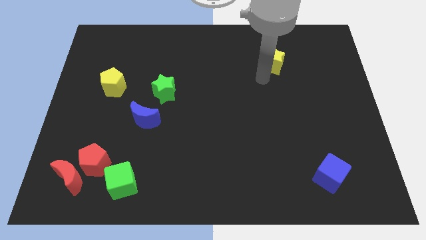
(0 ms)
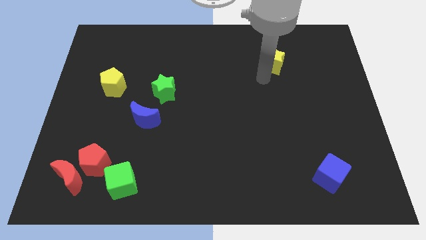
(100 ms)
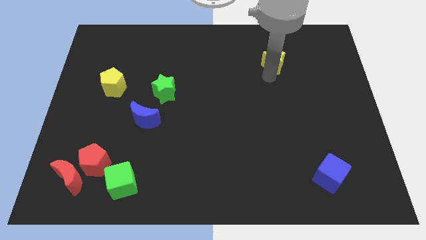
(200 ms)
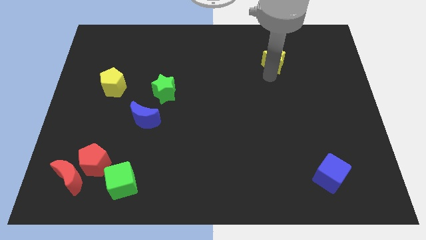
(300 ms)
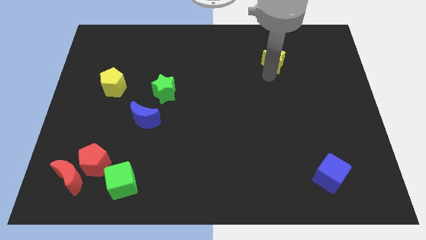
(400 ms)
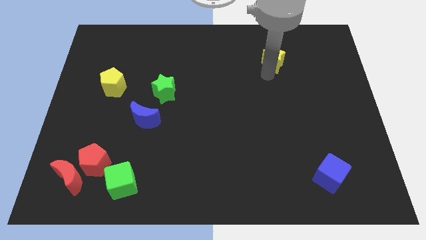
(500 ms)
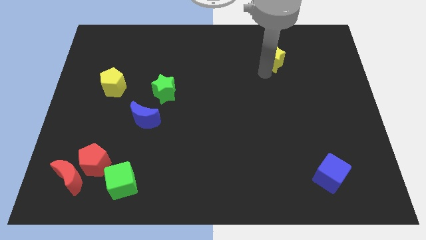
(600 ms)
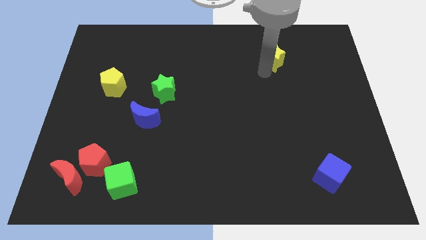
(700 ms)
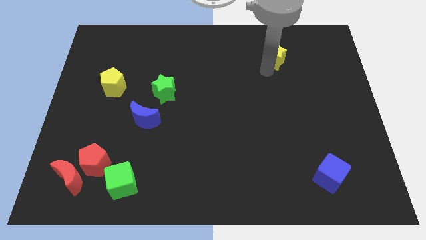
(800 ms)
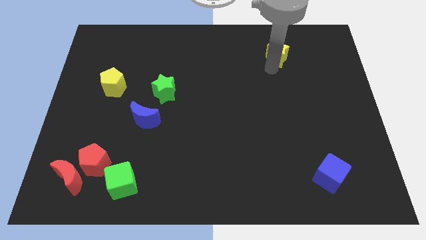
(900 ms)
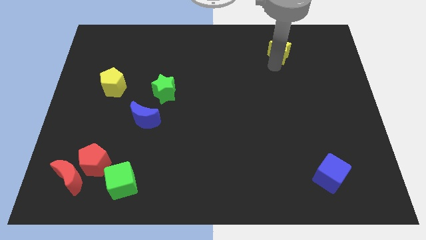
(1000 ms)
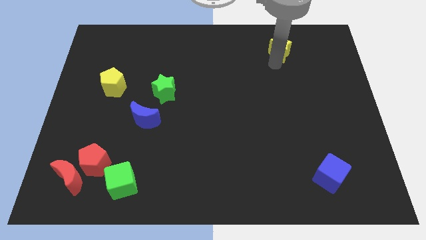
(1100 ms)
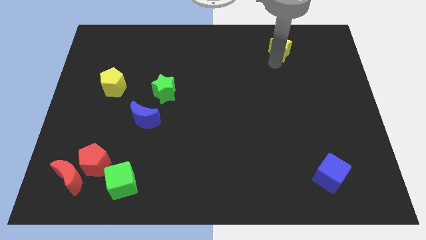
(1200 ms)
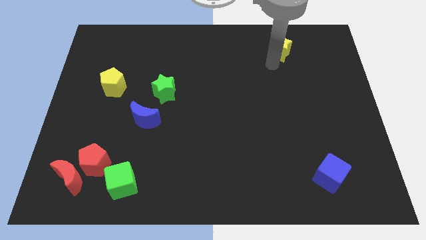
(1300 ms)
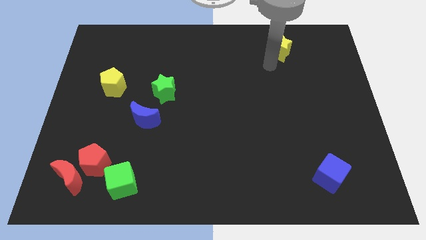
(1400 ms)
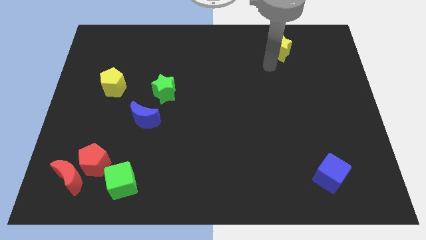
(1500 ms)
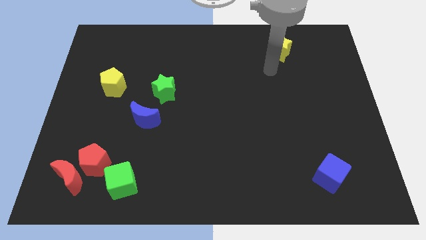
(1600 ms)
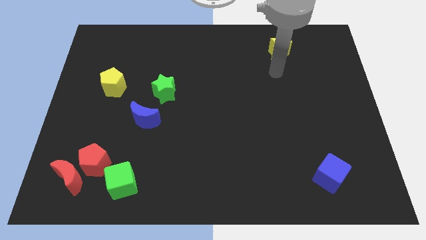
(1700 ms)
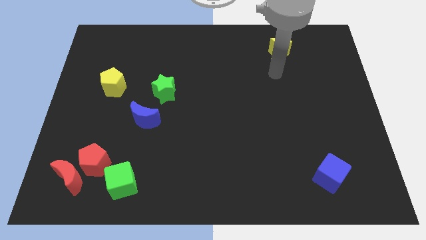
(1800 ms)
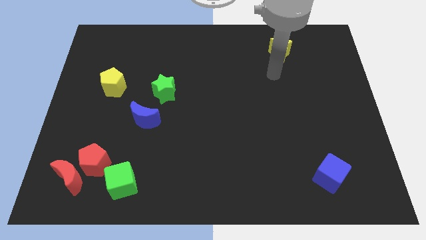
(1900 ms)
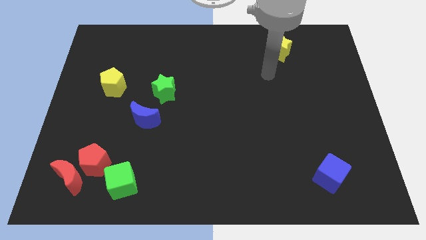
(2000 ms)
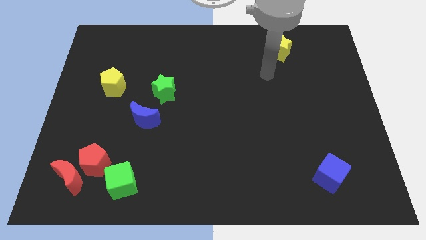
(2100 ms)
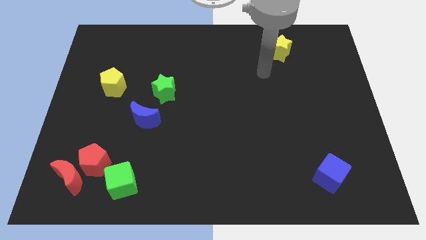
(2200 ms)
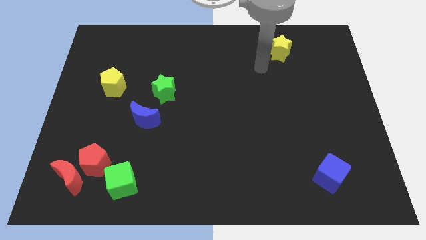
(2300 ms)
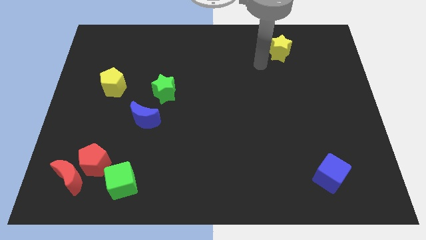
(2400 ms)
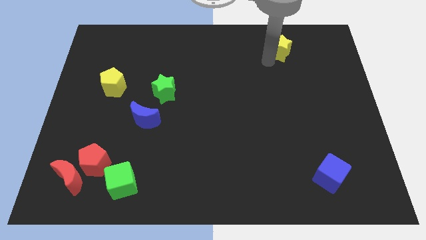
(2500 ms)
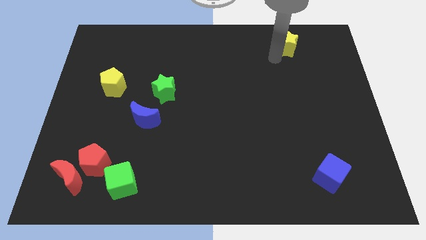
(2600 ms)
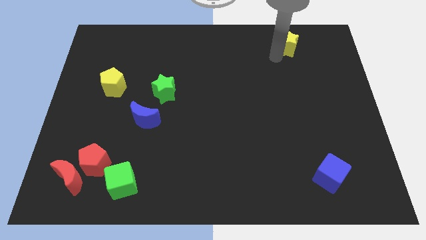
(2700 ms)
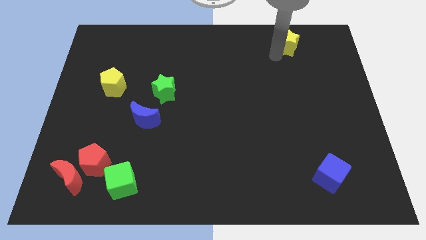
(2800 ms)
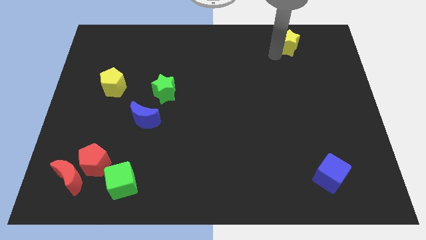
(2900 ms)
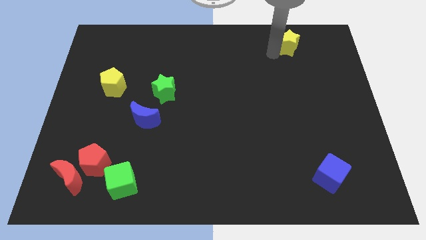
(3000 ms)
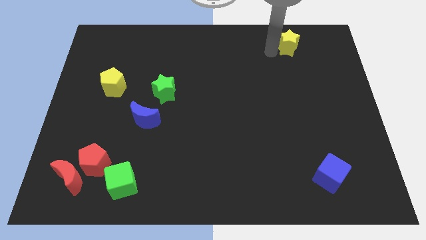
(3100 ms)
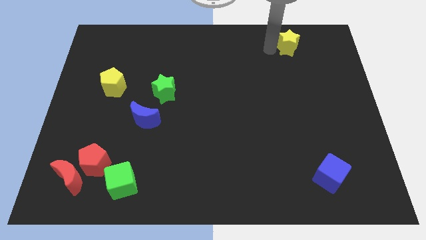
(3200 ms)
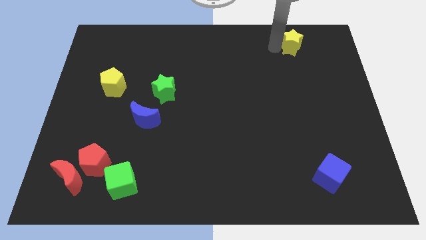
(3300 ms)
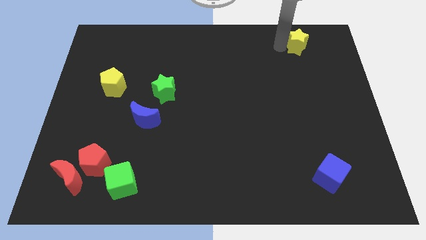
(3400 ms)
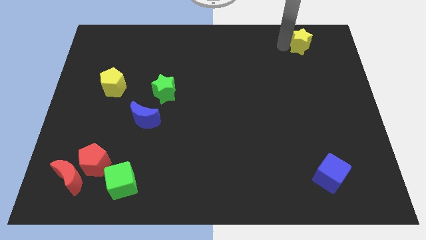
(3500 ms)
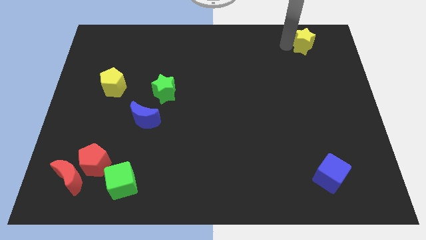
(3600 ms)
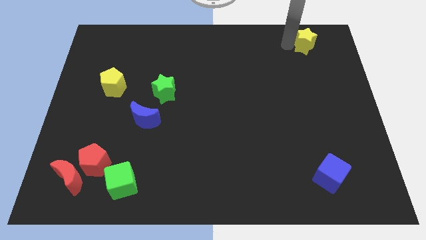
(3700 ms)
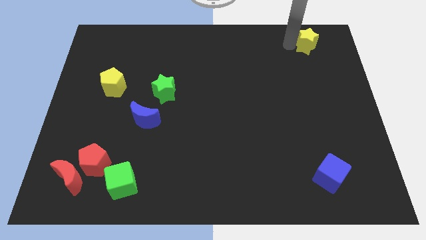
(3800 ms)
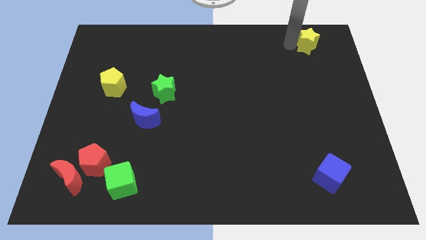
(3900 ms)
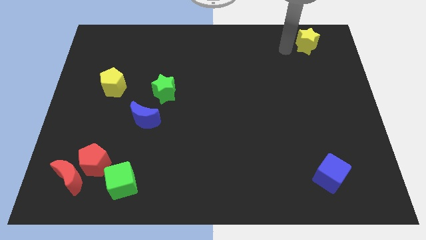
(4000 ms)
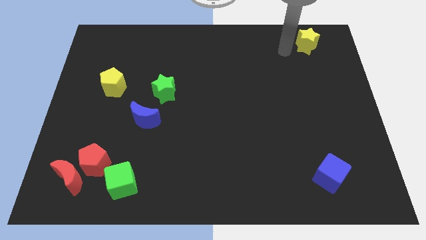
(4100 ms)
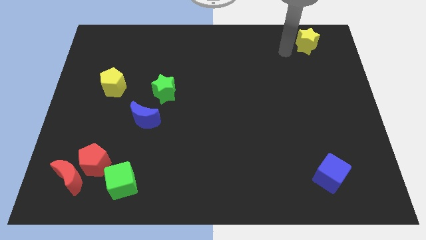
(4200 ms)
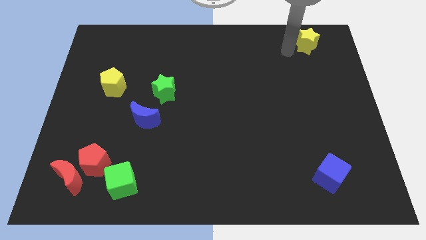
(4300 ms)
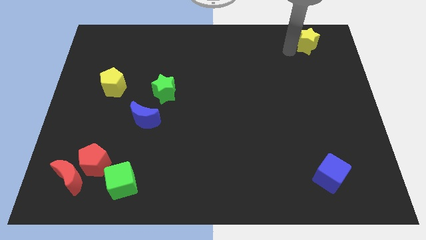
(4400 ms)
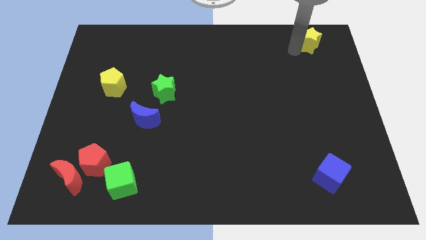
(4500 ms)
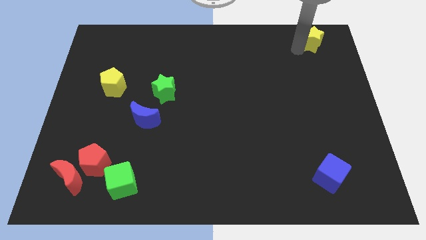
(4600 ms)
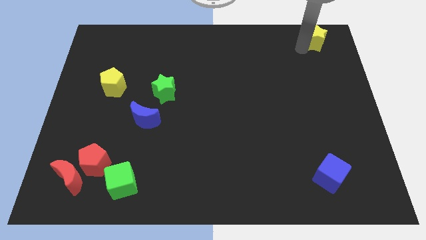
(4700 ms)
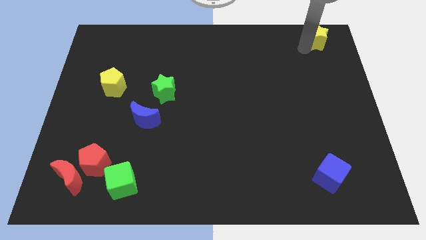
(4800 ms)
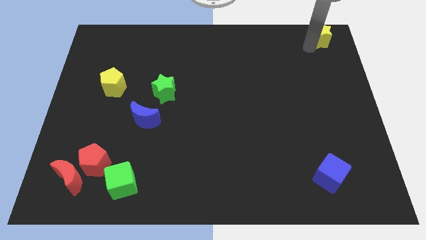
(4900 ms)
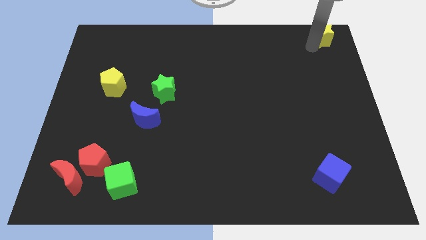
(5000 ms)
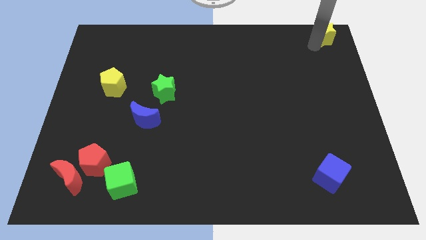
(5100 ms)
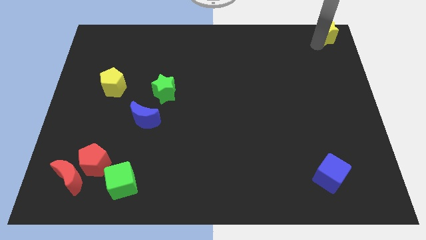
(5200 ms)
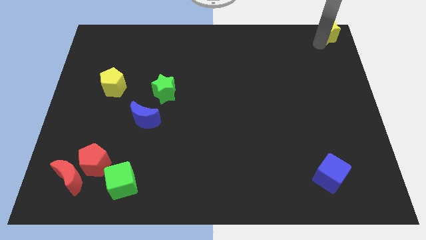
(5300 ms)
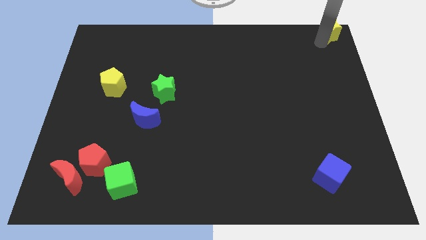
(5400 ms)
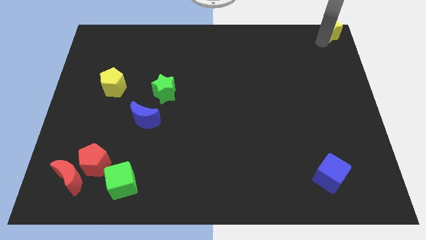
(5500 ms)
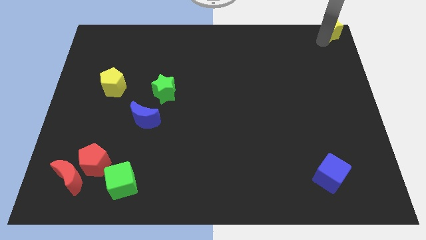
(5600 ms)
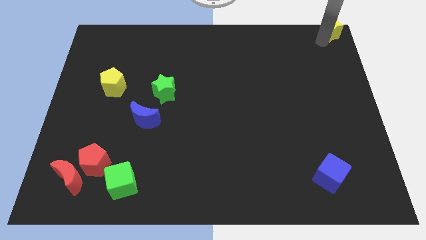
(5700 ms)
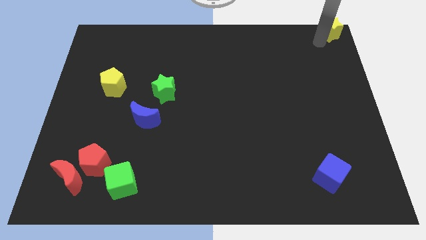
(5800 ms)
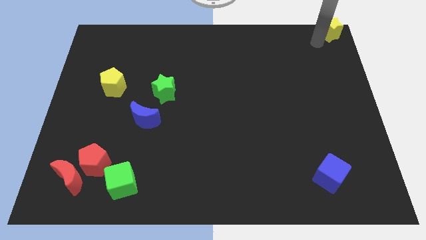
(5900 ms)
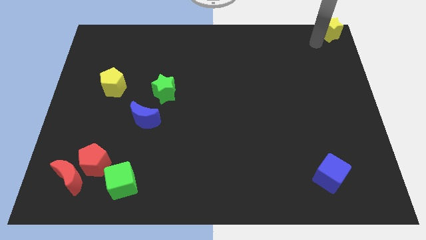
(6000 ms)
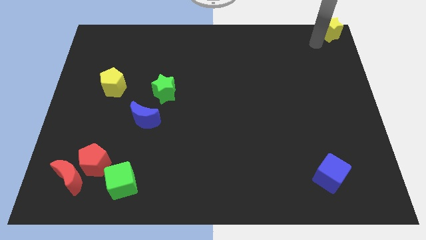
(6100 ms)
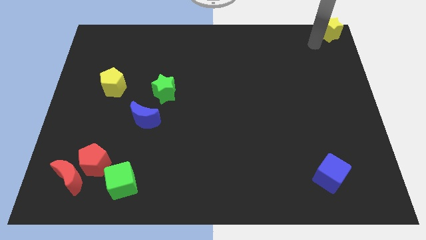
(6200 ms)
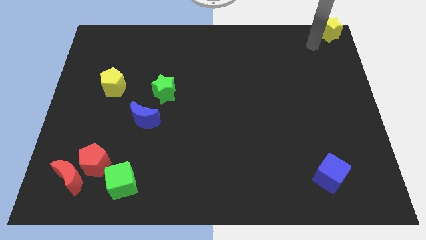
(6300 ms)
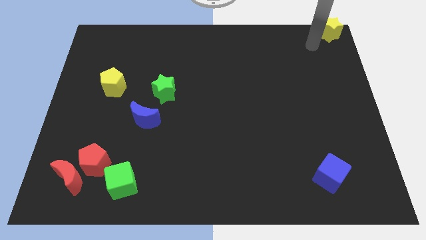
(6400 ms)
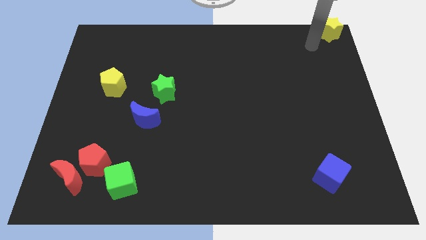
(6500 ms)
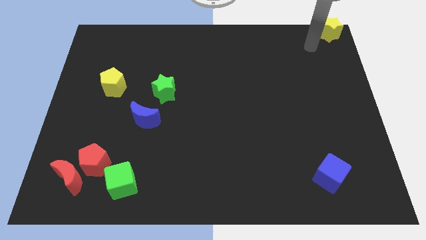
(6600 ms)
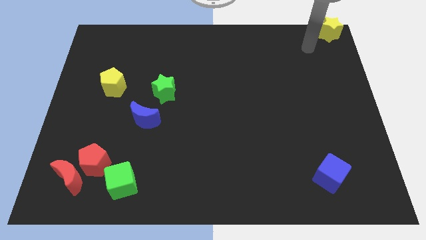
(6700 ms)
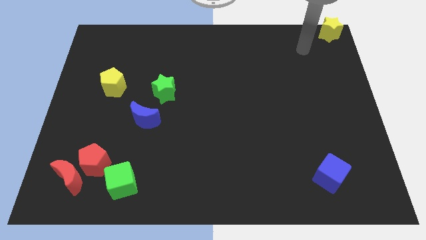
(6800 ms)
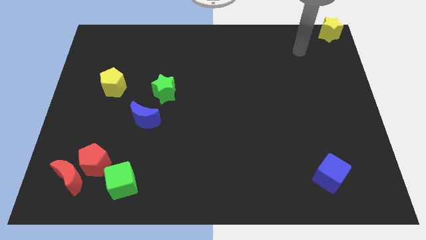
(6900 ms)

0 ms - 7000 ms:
move the yellow star to the top right corner

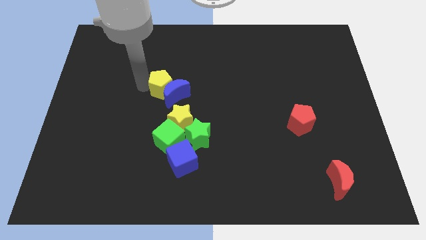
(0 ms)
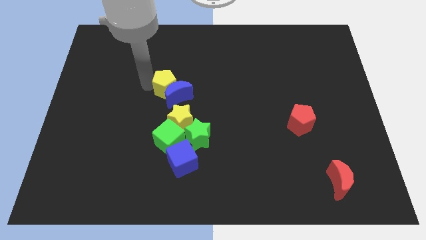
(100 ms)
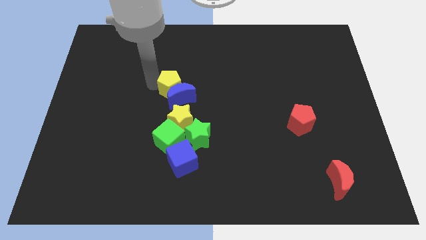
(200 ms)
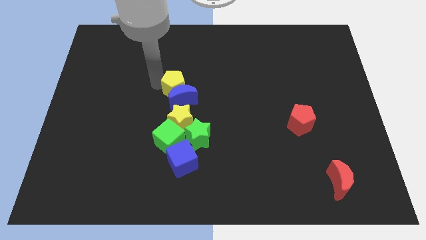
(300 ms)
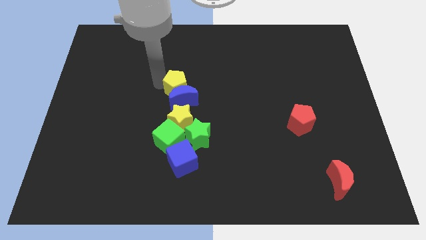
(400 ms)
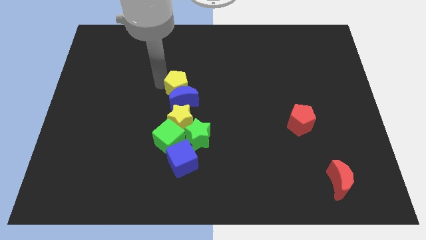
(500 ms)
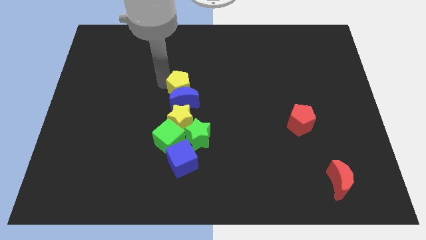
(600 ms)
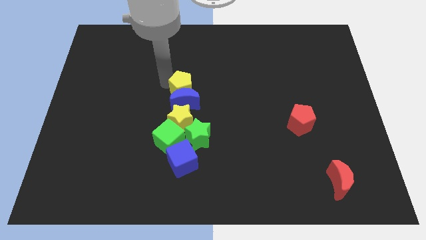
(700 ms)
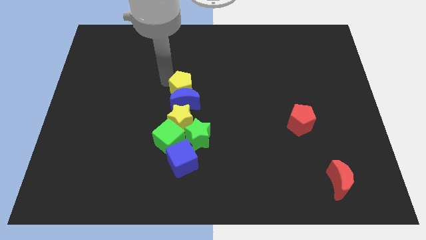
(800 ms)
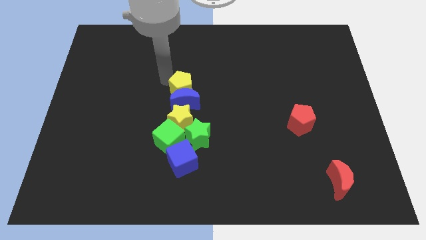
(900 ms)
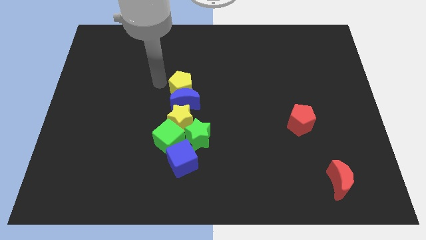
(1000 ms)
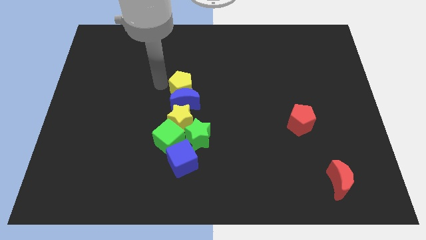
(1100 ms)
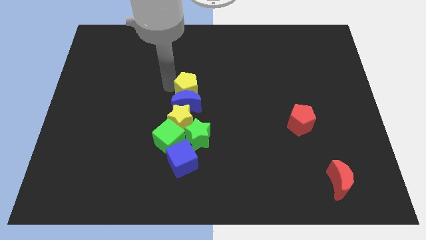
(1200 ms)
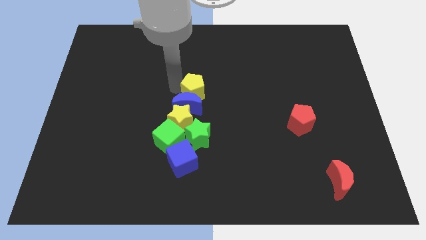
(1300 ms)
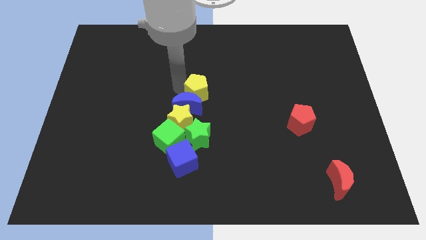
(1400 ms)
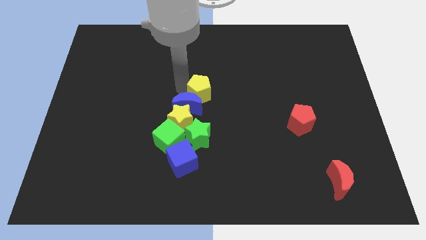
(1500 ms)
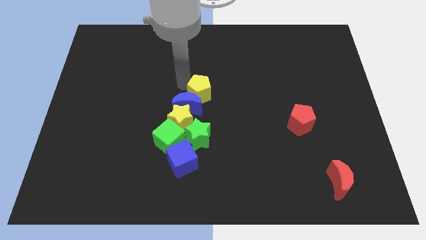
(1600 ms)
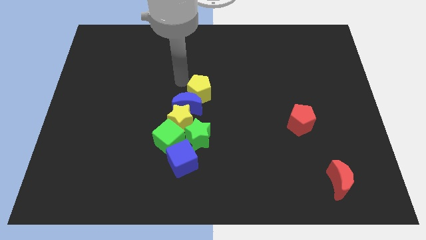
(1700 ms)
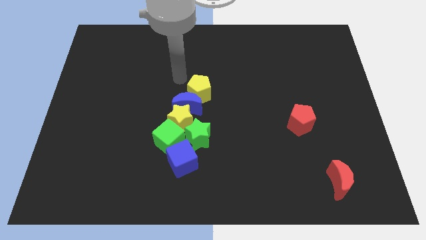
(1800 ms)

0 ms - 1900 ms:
place the blue crescent top to the yellow star with the yellow pentagon

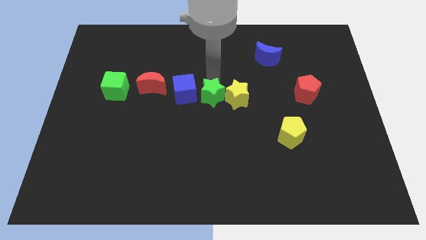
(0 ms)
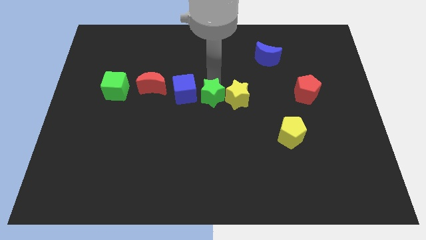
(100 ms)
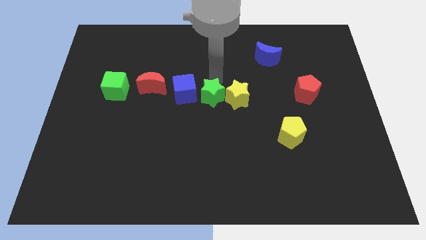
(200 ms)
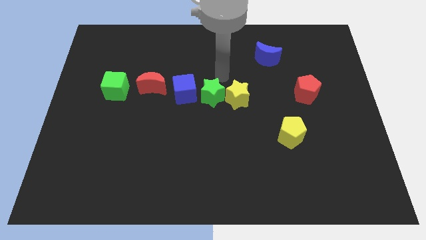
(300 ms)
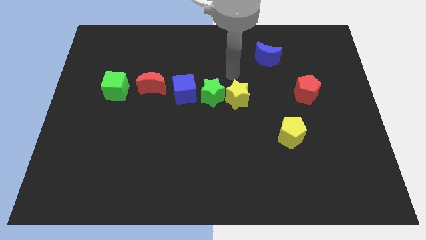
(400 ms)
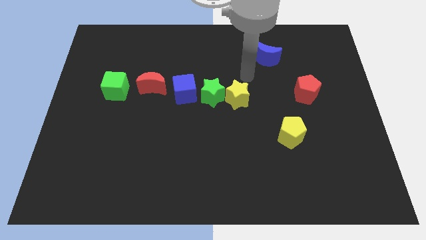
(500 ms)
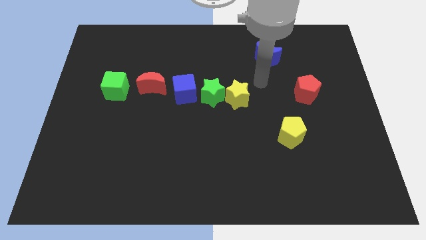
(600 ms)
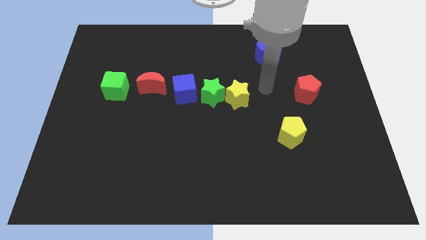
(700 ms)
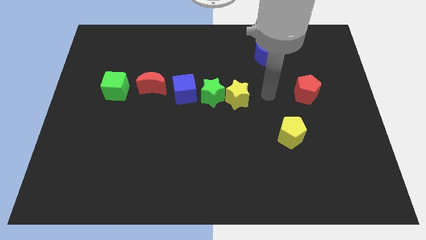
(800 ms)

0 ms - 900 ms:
move arm away from green star
